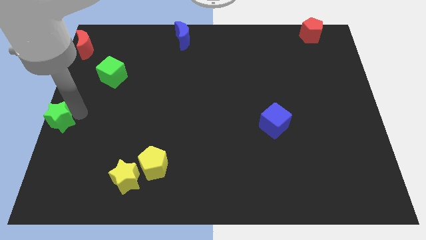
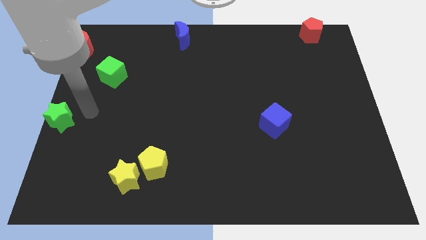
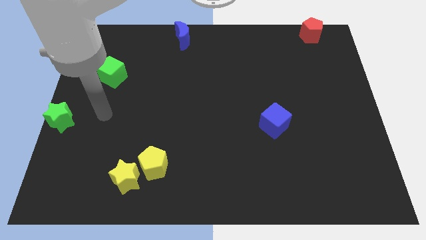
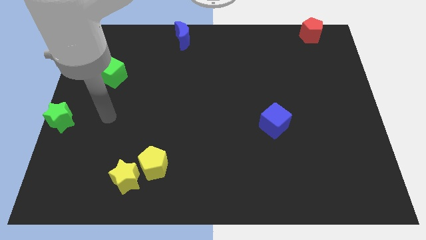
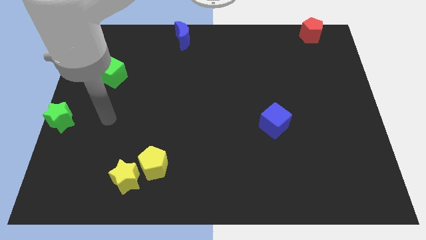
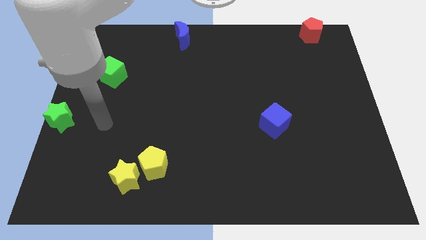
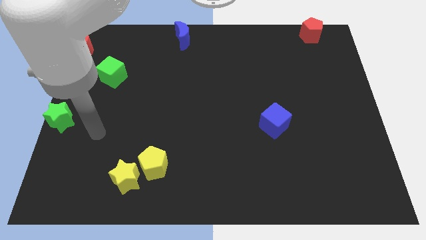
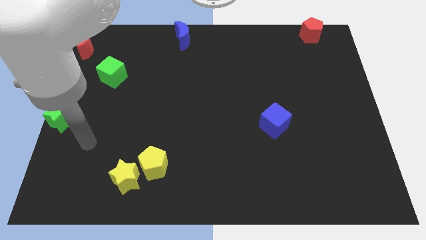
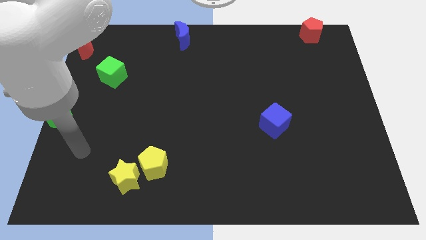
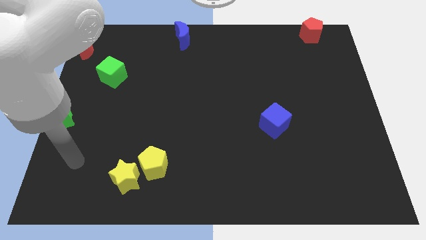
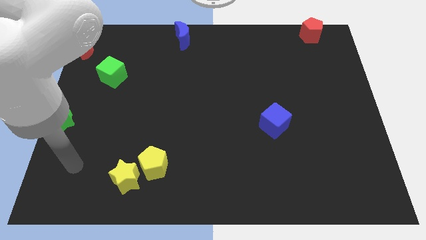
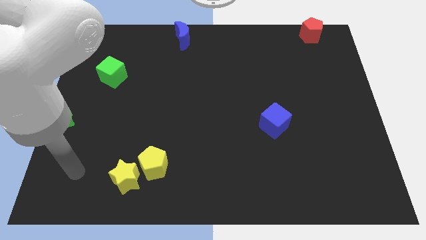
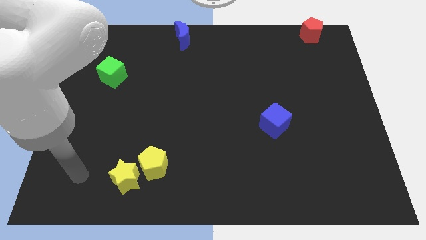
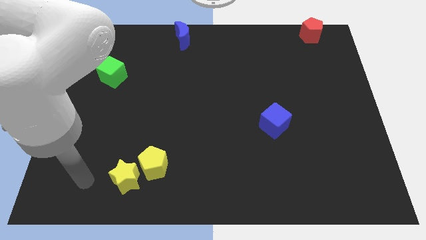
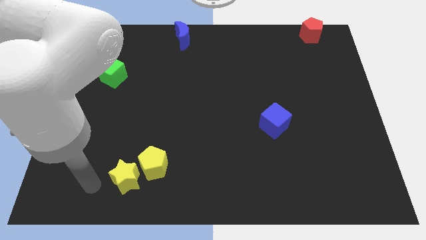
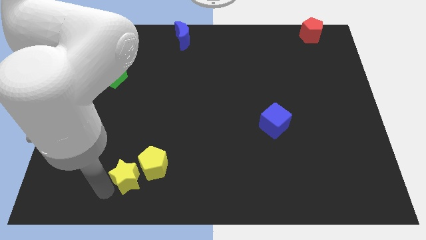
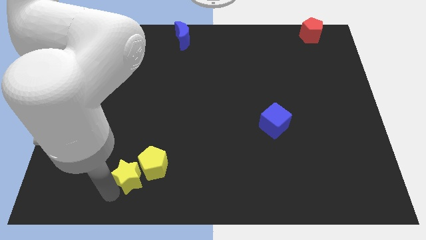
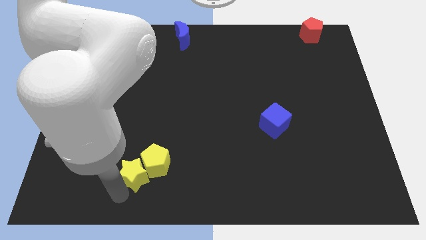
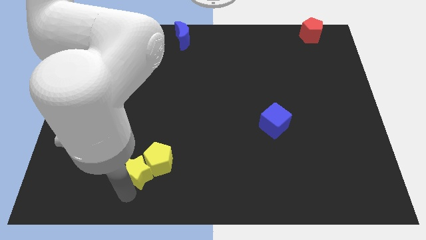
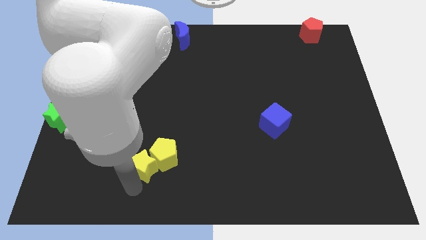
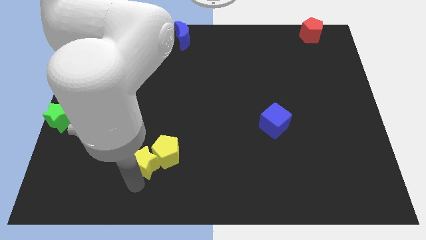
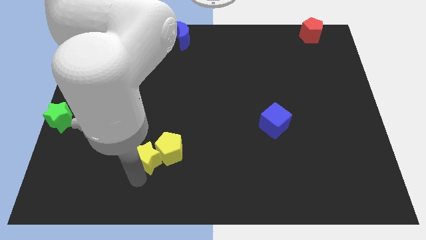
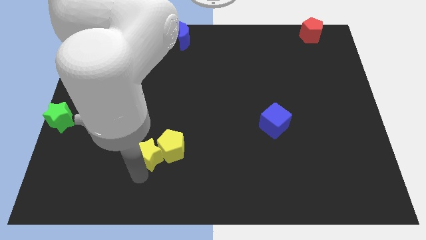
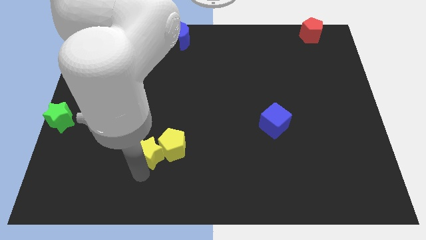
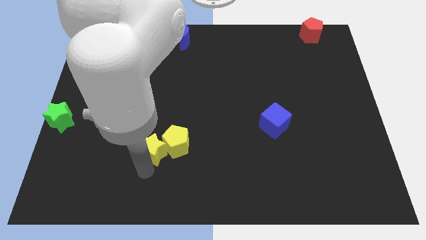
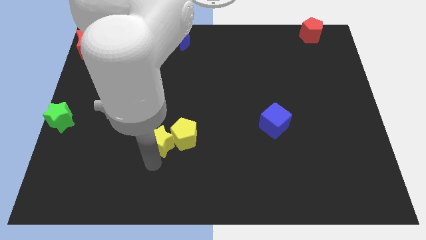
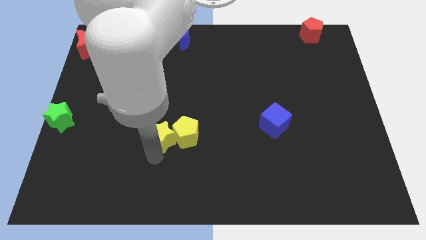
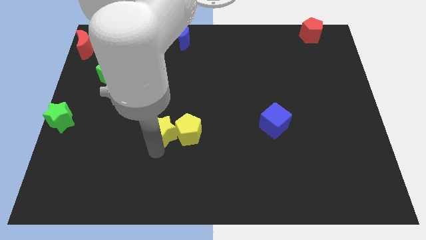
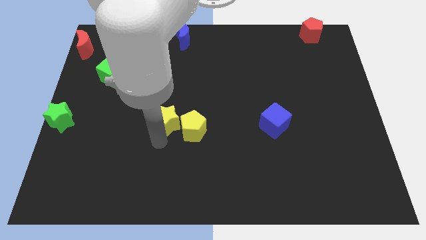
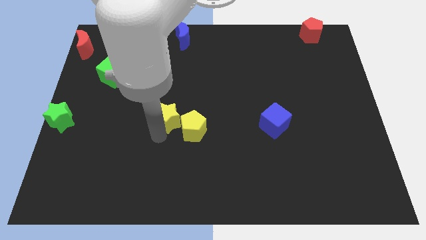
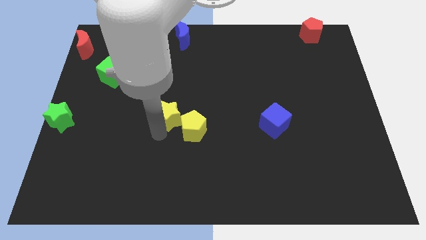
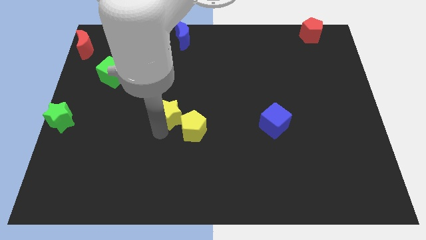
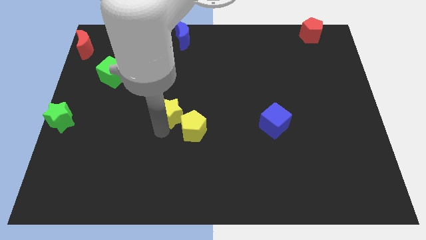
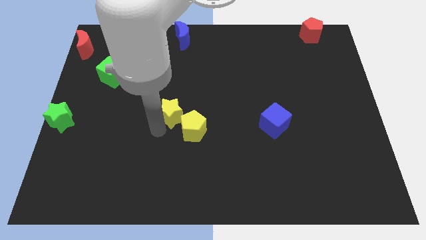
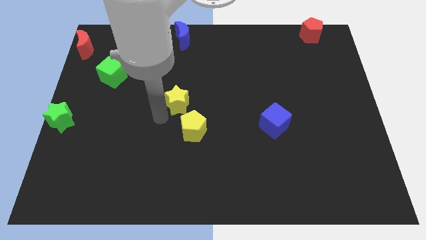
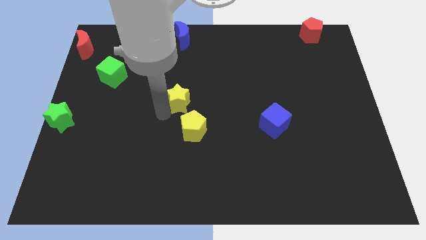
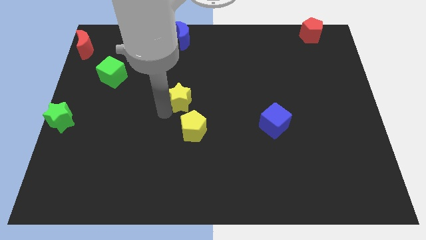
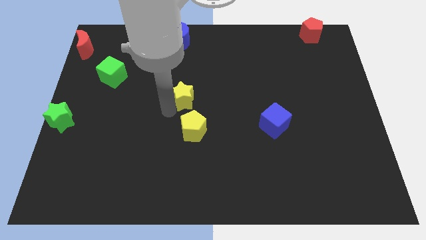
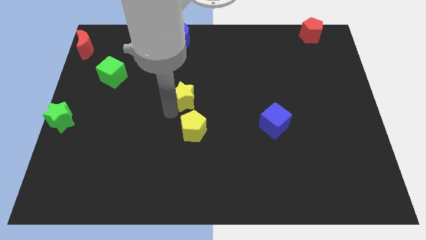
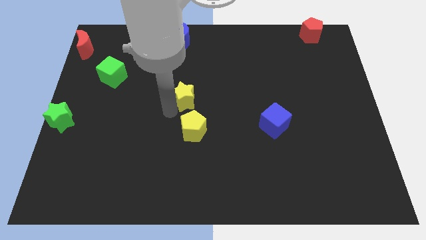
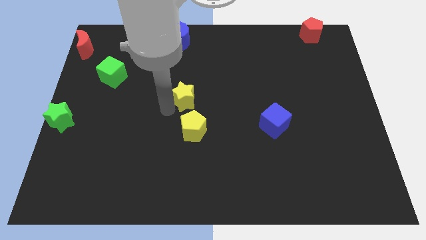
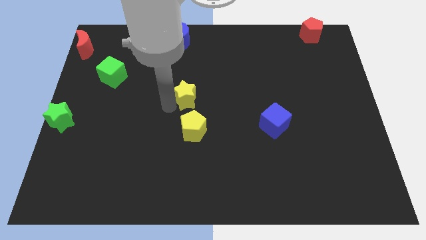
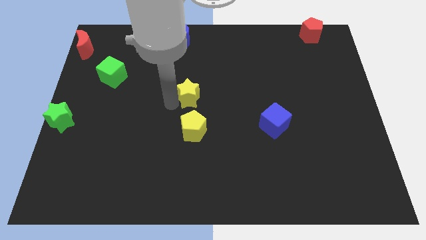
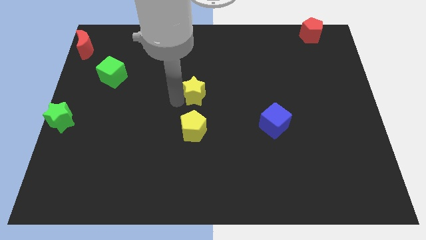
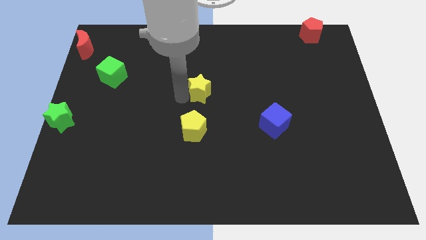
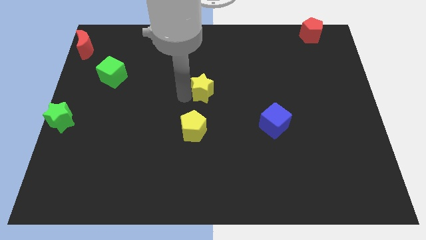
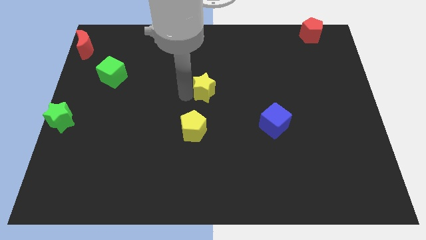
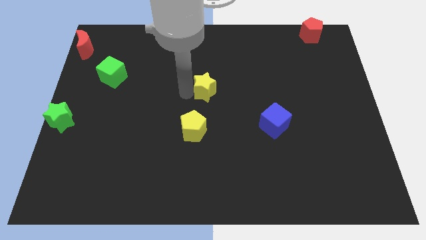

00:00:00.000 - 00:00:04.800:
place the yellow star in between the blue cube and green cube

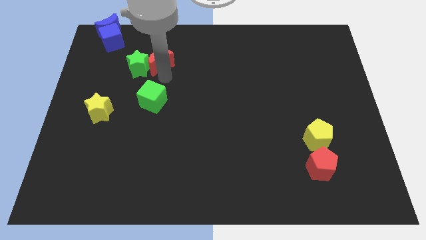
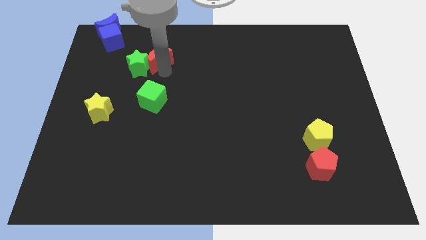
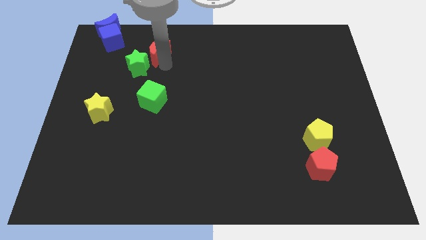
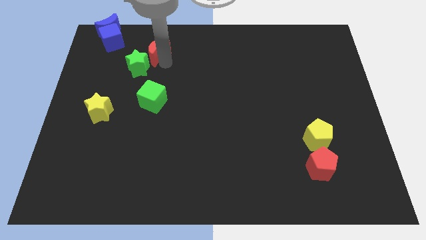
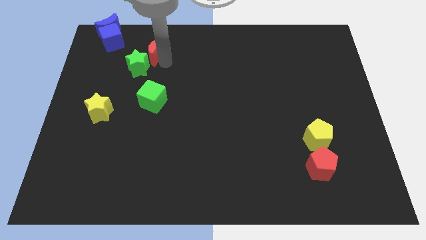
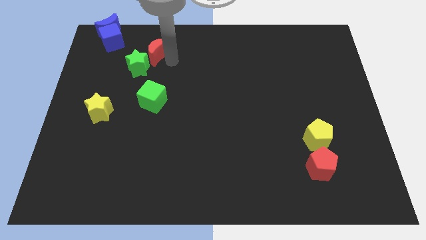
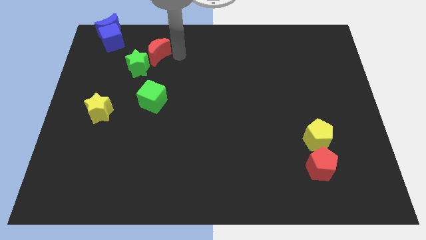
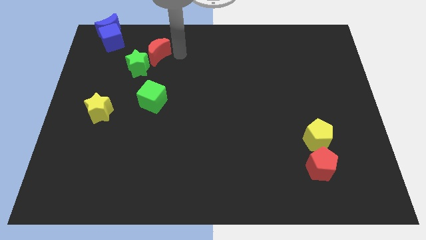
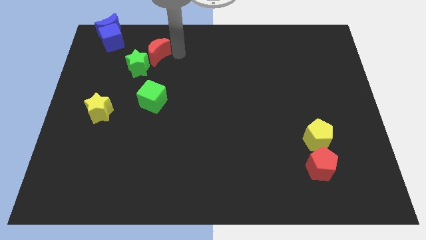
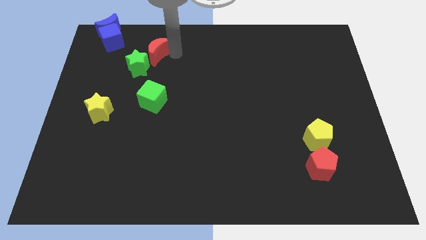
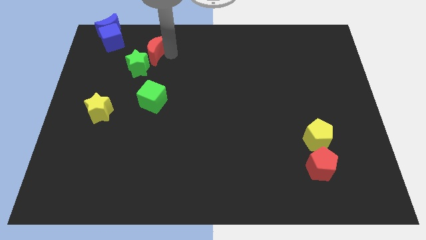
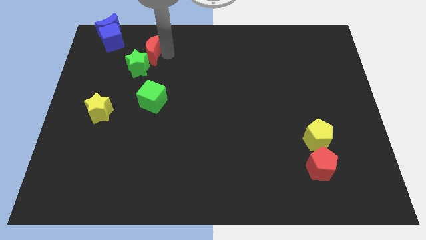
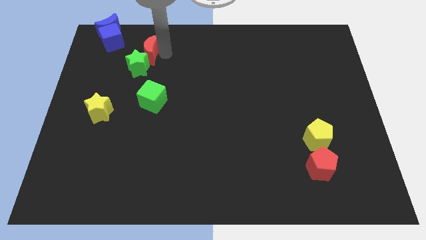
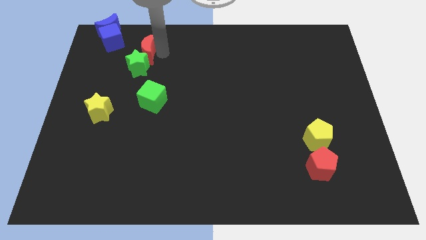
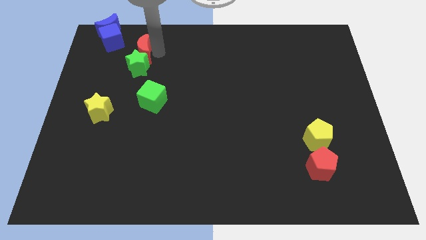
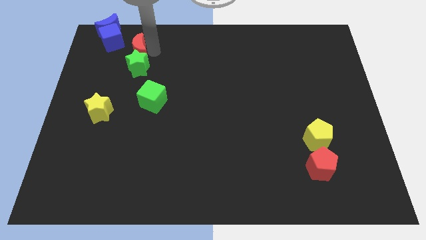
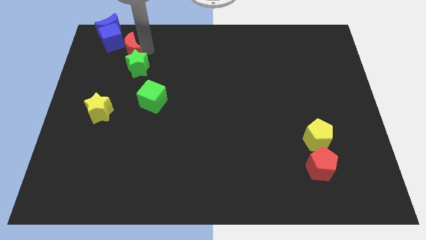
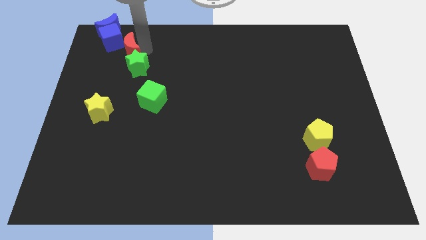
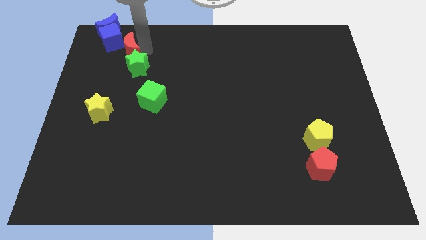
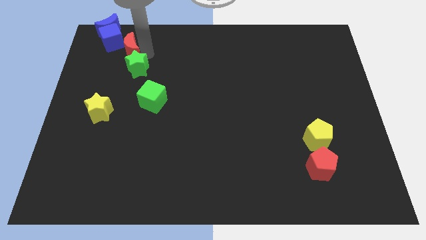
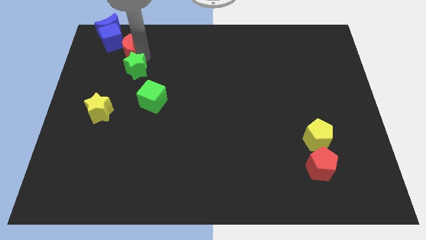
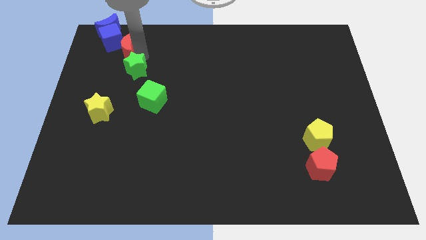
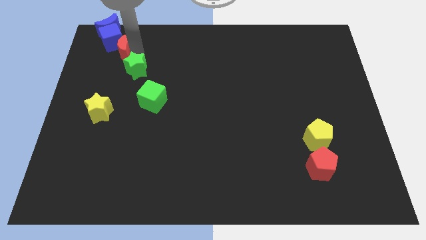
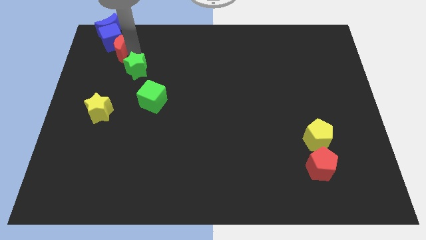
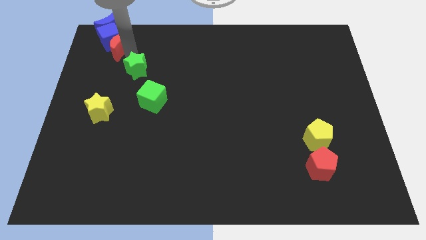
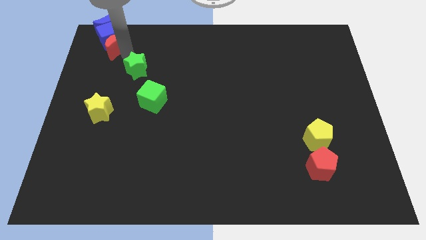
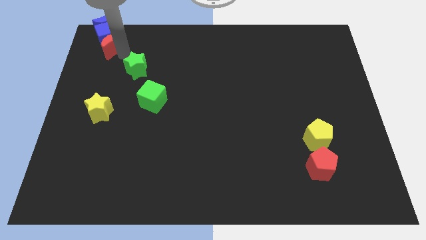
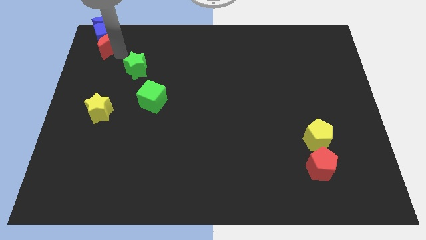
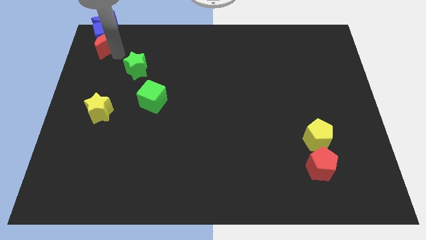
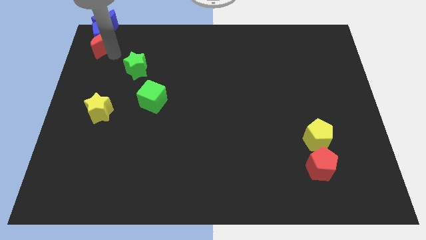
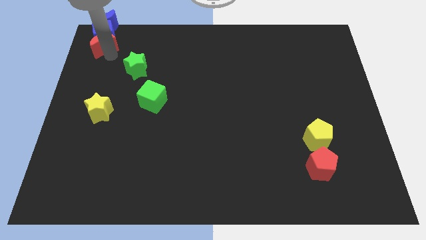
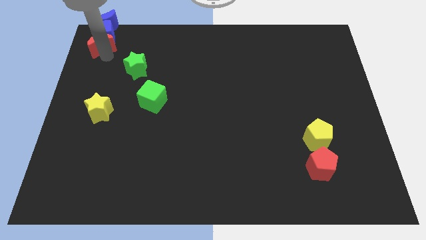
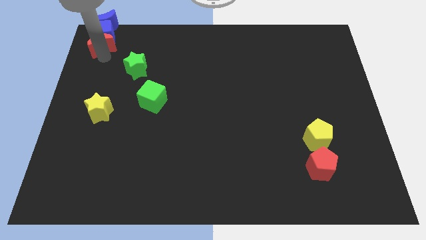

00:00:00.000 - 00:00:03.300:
push red crescent above yellow star

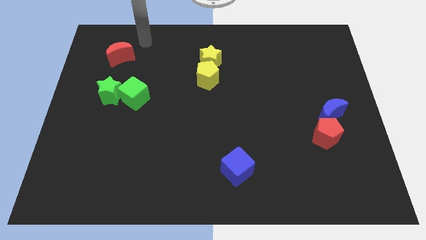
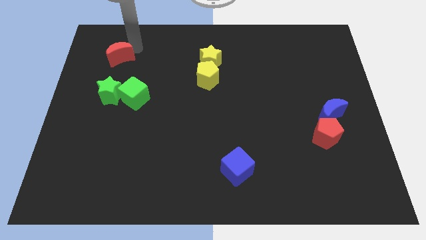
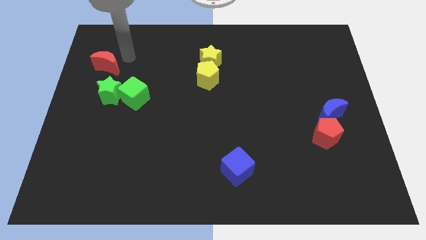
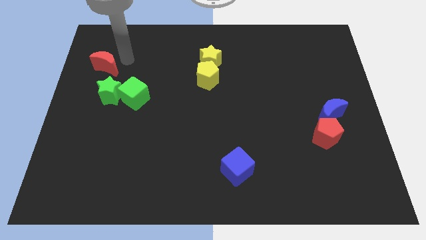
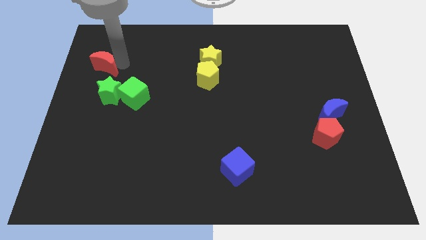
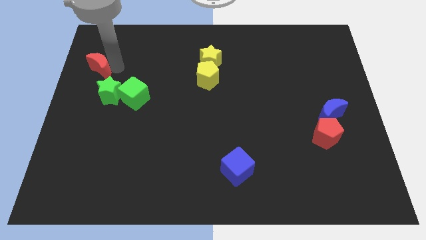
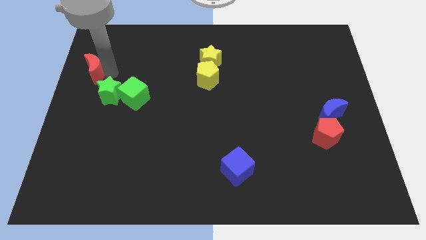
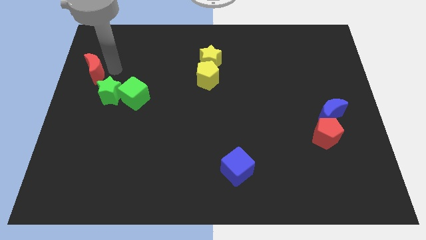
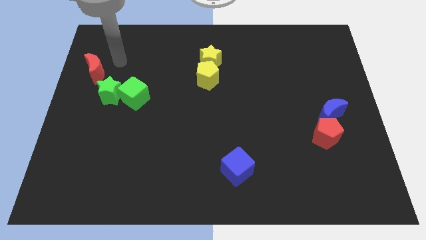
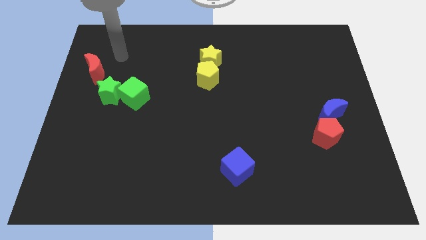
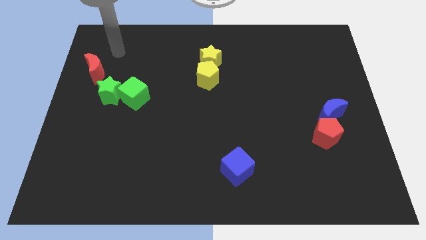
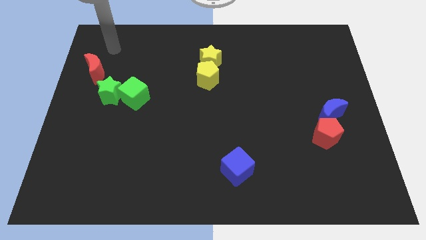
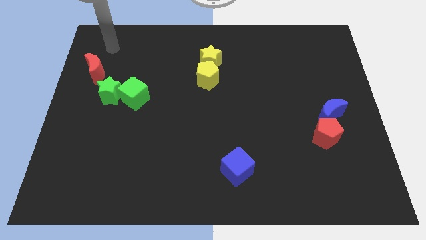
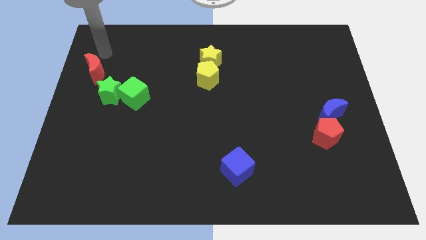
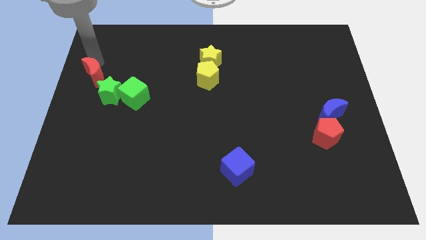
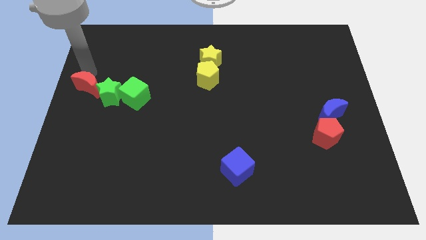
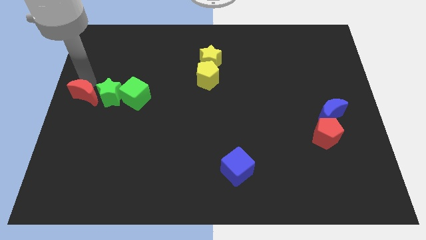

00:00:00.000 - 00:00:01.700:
place the red moon to the left of the green star
